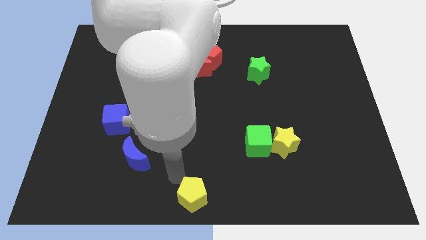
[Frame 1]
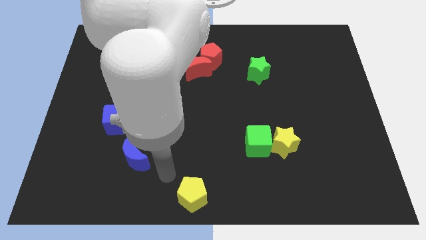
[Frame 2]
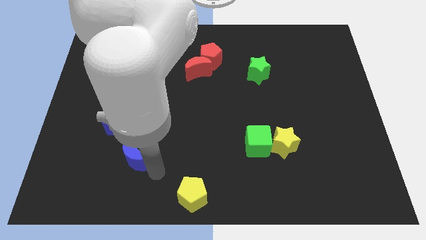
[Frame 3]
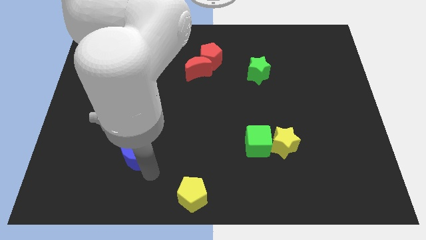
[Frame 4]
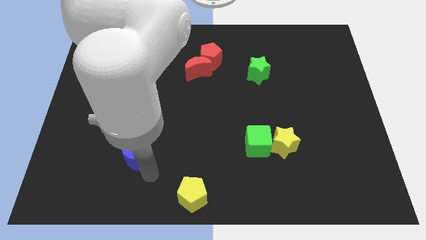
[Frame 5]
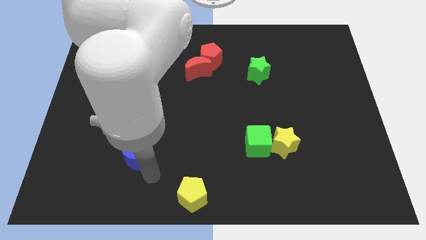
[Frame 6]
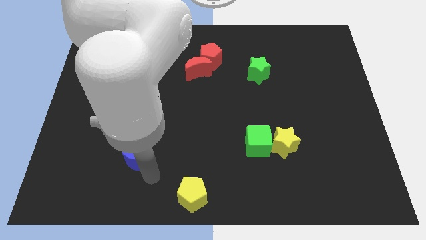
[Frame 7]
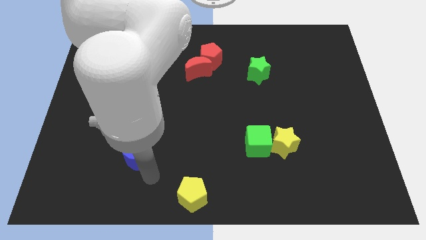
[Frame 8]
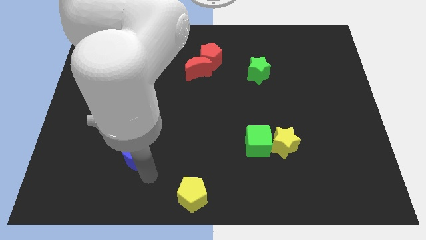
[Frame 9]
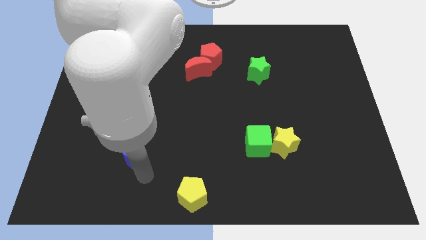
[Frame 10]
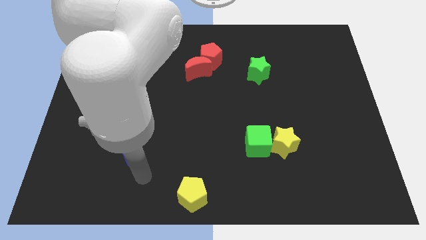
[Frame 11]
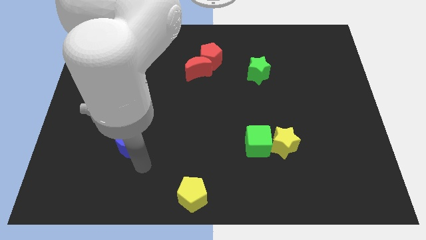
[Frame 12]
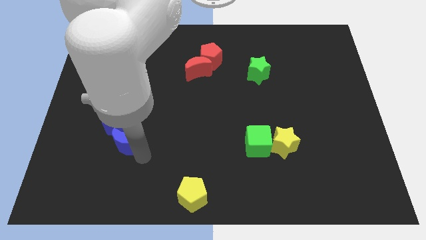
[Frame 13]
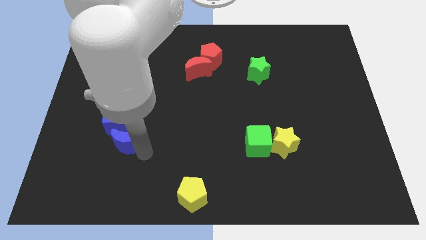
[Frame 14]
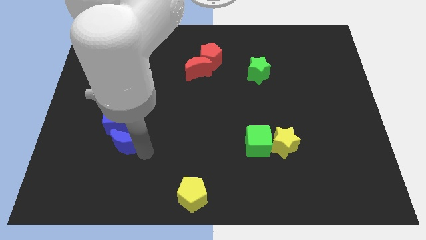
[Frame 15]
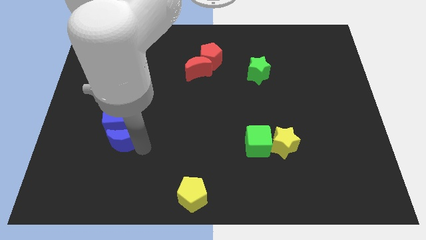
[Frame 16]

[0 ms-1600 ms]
move the blue moon vertically below the blue cube

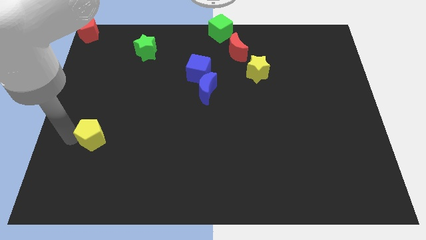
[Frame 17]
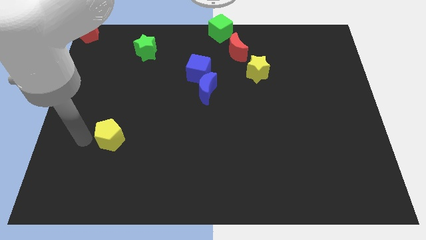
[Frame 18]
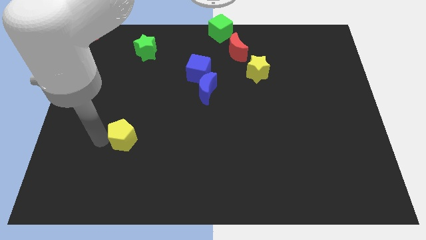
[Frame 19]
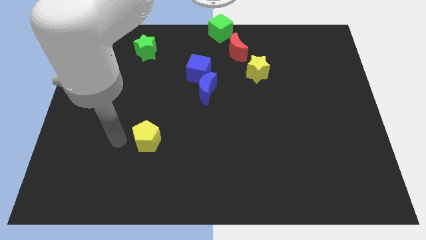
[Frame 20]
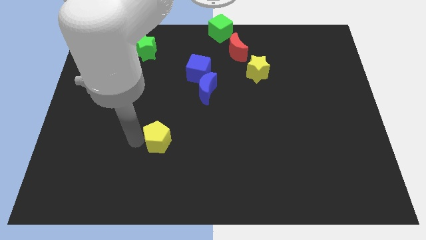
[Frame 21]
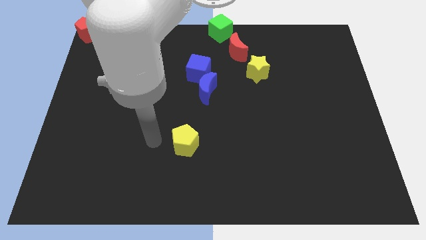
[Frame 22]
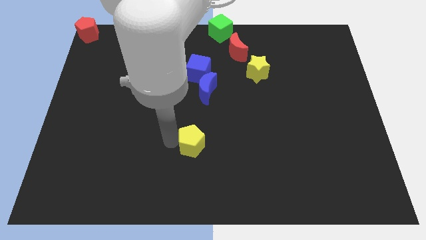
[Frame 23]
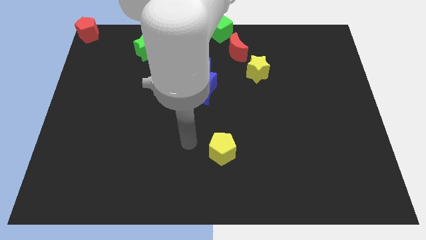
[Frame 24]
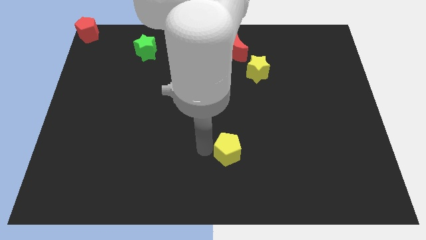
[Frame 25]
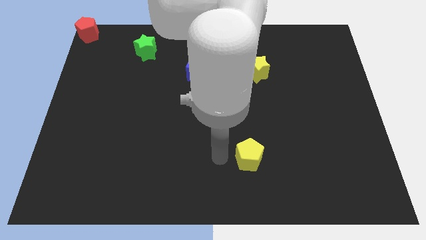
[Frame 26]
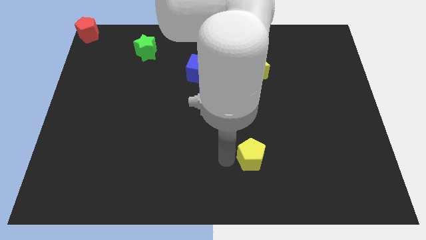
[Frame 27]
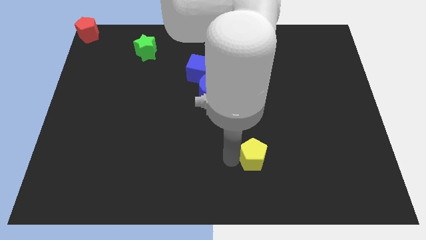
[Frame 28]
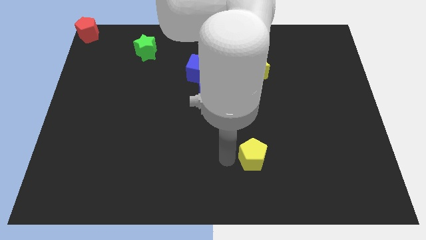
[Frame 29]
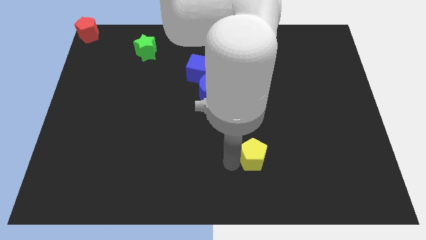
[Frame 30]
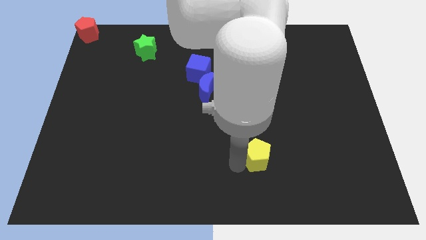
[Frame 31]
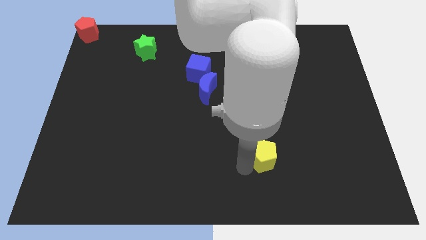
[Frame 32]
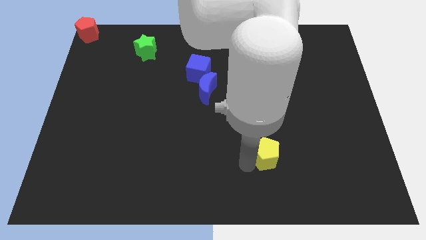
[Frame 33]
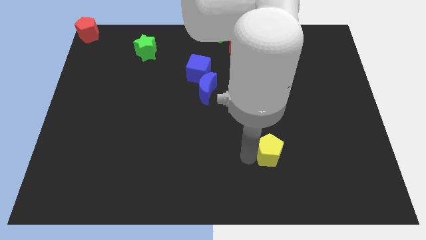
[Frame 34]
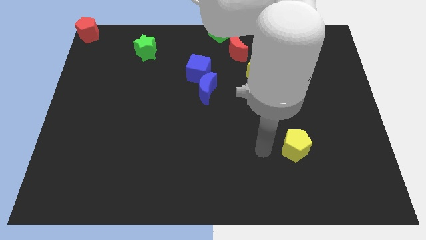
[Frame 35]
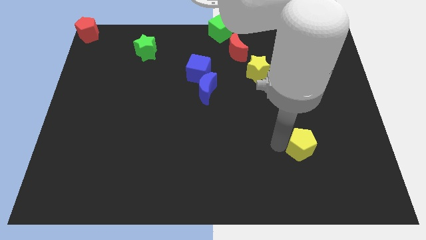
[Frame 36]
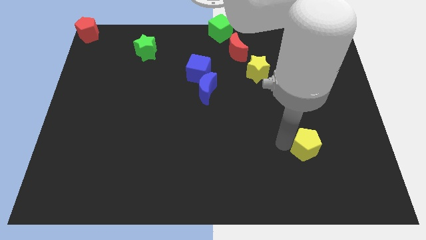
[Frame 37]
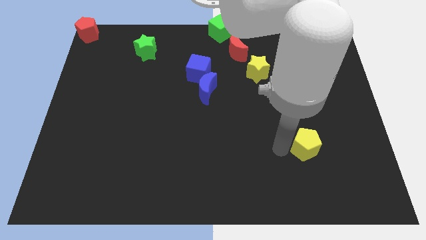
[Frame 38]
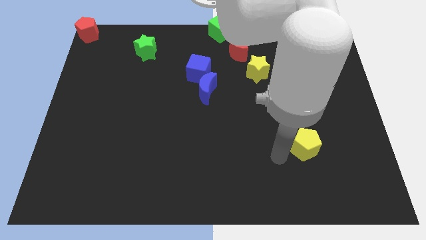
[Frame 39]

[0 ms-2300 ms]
move yellow pentagon towards the right center of the board

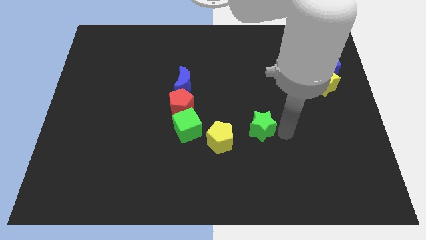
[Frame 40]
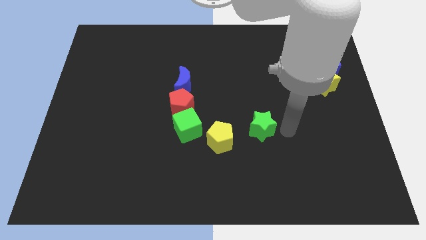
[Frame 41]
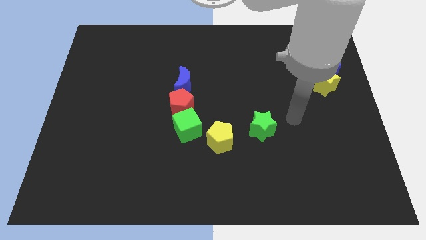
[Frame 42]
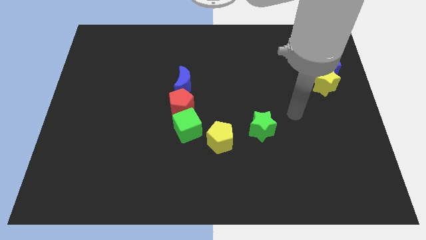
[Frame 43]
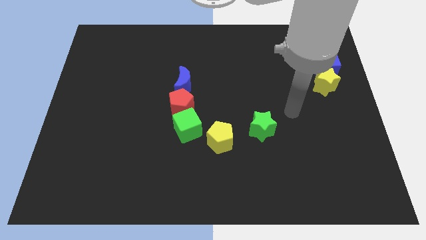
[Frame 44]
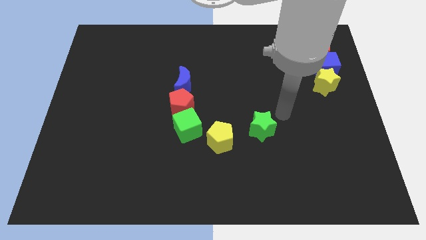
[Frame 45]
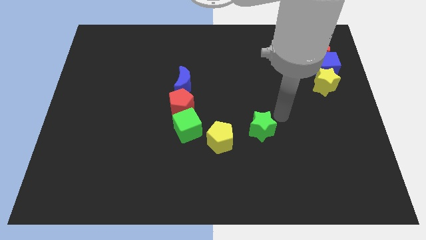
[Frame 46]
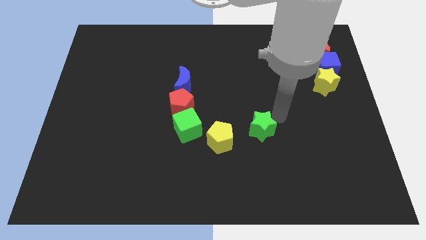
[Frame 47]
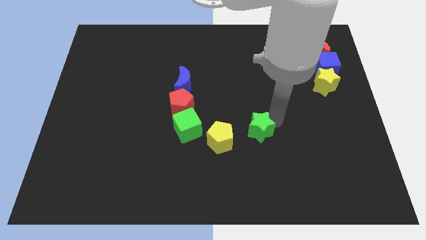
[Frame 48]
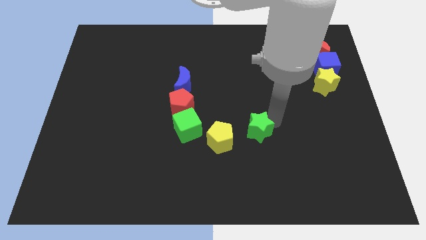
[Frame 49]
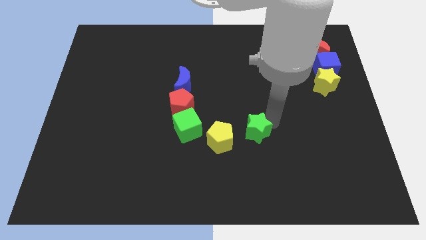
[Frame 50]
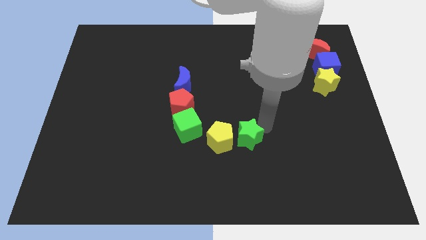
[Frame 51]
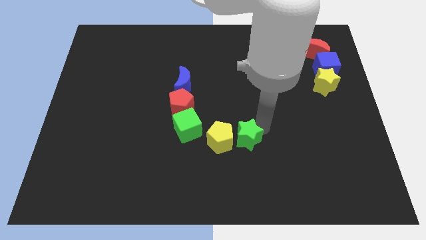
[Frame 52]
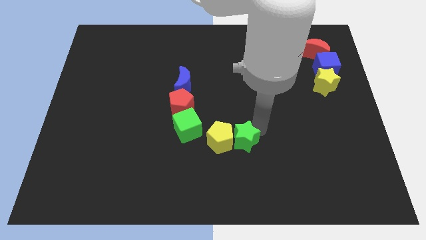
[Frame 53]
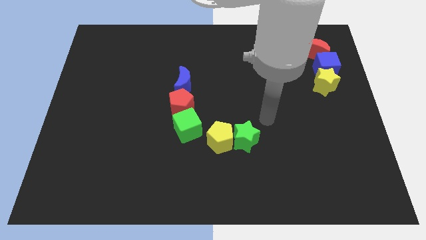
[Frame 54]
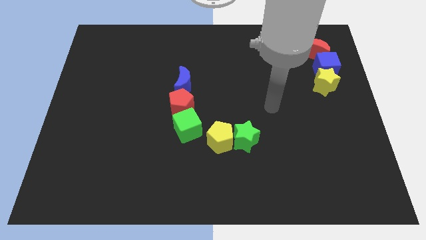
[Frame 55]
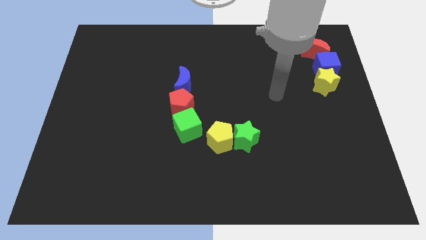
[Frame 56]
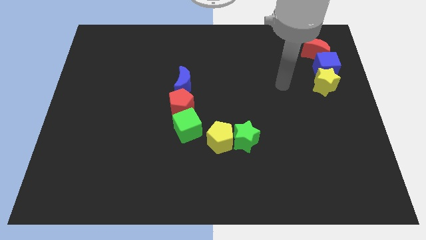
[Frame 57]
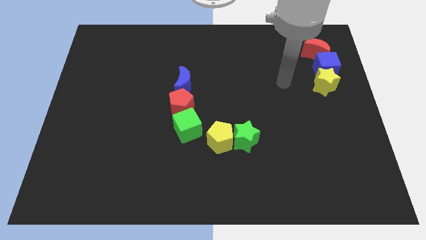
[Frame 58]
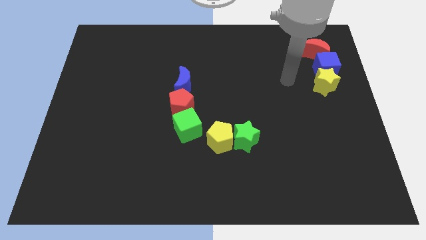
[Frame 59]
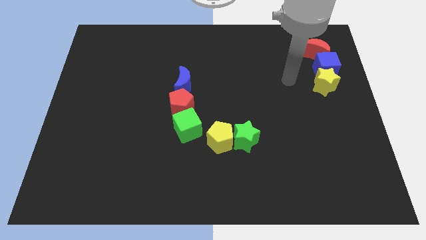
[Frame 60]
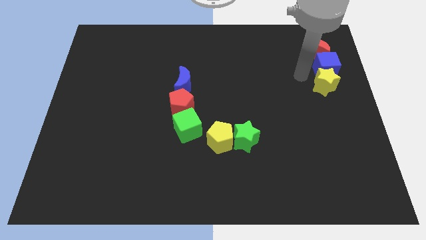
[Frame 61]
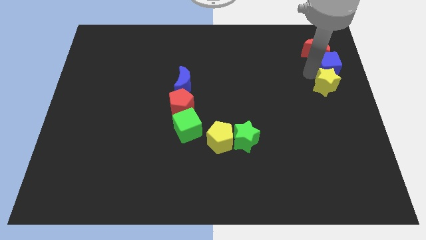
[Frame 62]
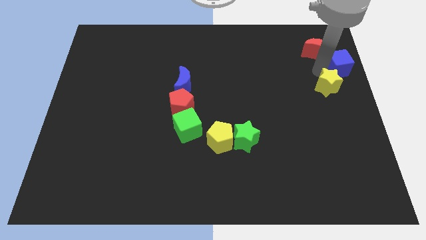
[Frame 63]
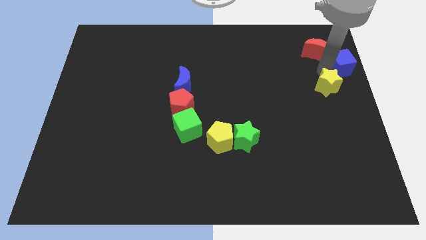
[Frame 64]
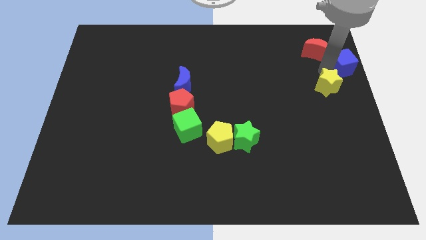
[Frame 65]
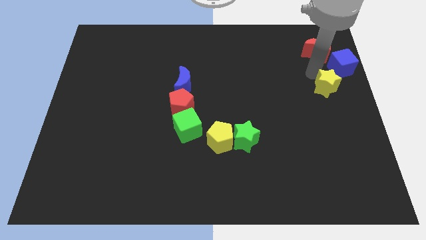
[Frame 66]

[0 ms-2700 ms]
push green star into yellow pentagon

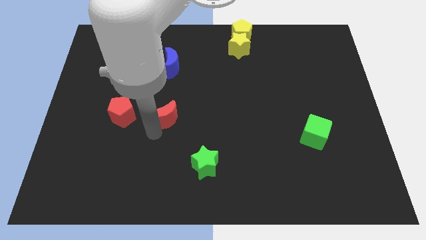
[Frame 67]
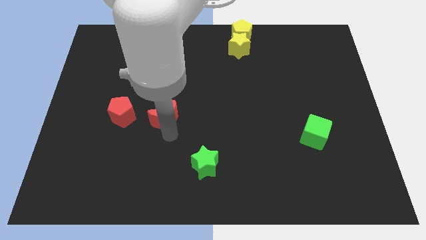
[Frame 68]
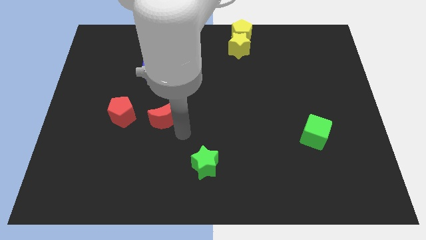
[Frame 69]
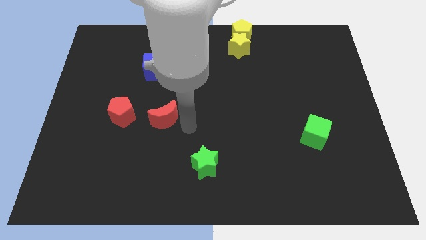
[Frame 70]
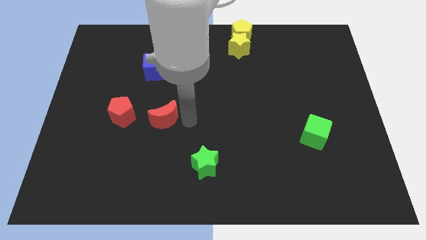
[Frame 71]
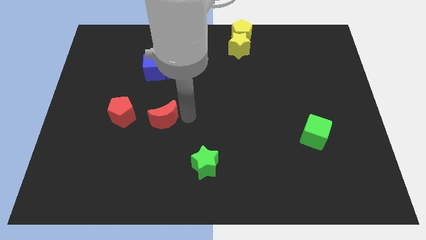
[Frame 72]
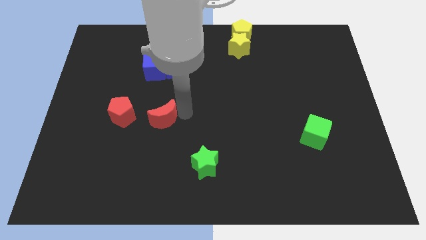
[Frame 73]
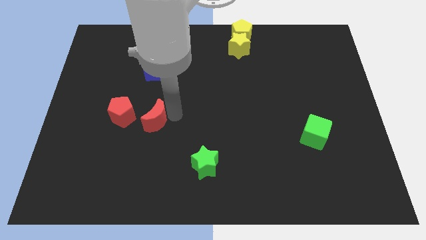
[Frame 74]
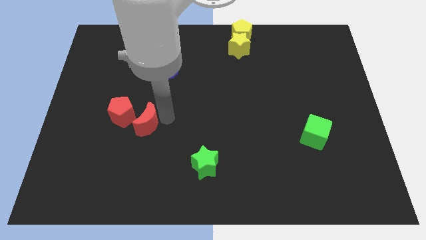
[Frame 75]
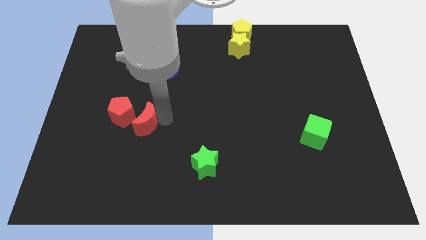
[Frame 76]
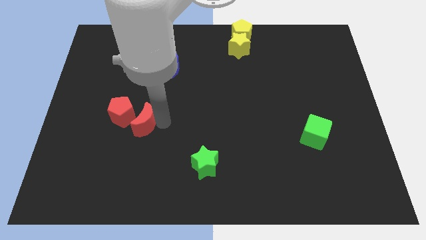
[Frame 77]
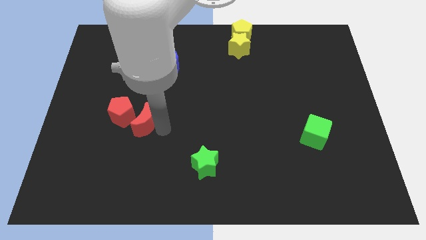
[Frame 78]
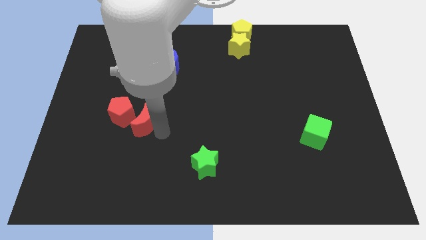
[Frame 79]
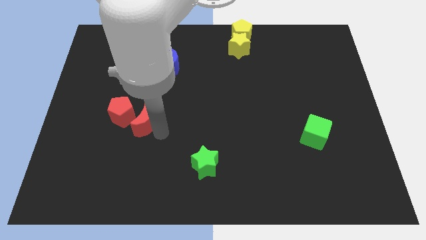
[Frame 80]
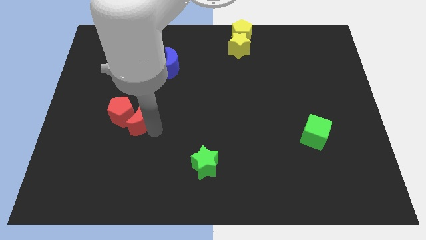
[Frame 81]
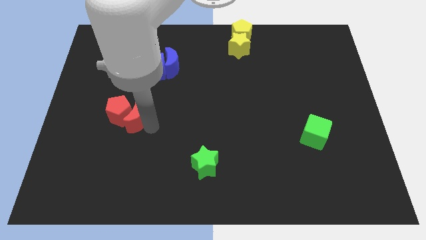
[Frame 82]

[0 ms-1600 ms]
put the red moon into the red pentagon

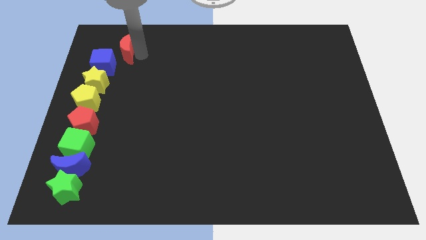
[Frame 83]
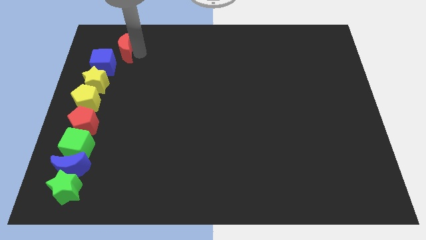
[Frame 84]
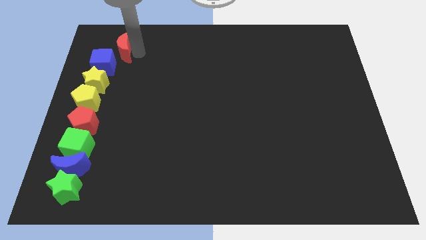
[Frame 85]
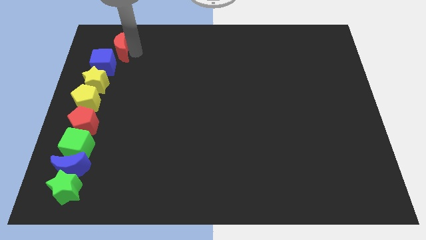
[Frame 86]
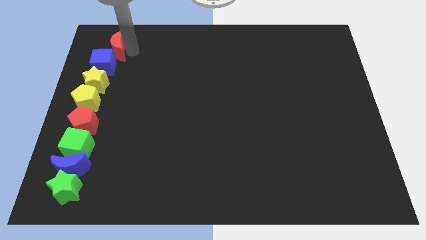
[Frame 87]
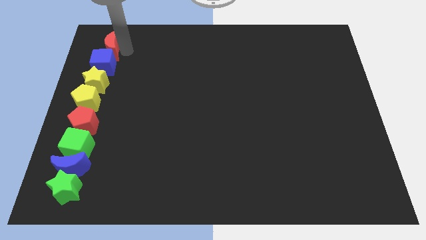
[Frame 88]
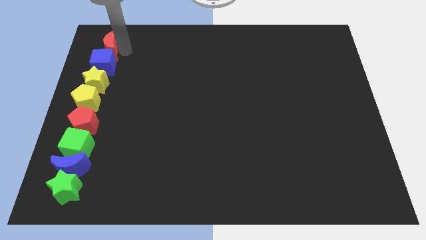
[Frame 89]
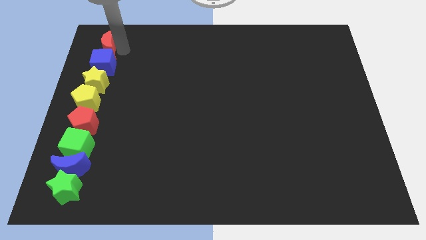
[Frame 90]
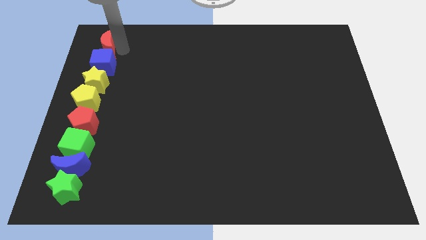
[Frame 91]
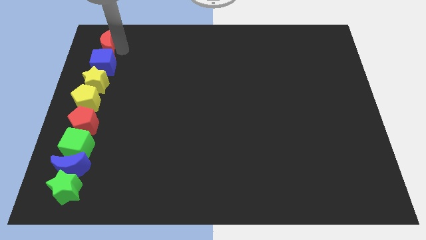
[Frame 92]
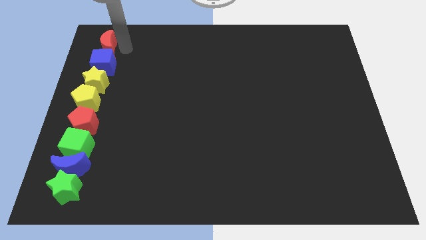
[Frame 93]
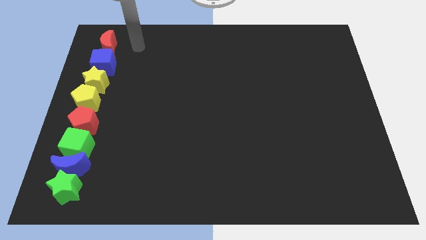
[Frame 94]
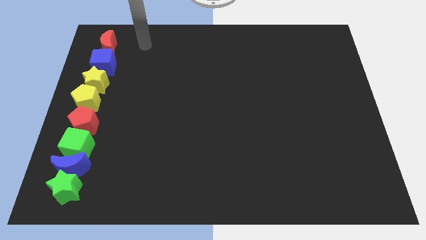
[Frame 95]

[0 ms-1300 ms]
place red moon at the top of blue cube
